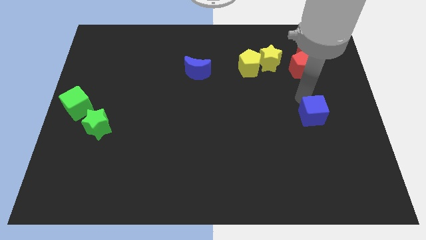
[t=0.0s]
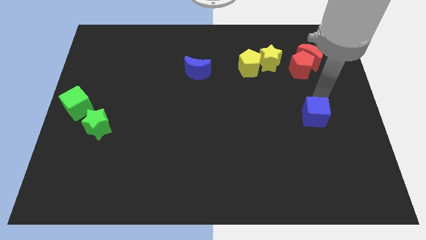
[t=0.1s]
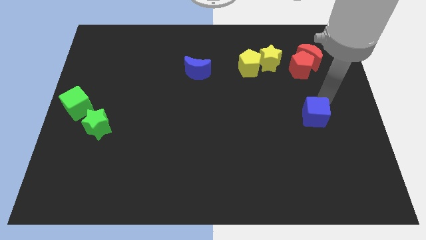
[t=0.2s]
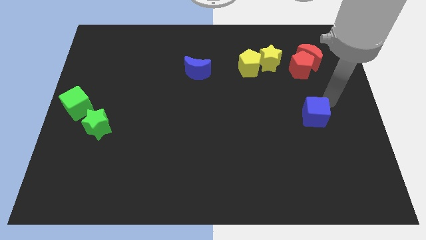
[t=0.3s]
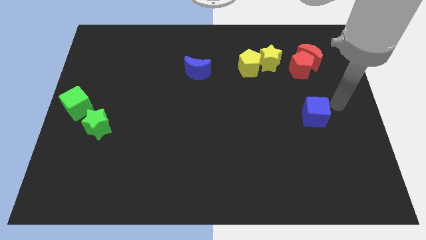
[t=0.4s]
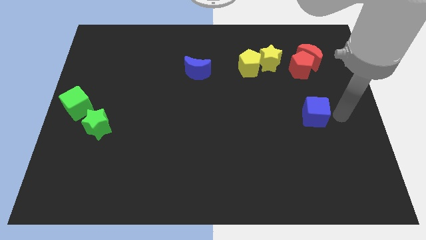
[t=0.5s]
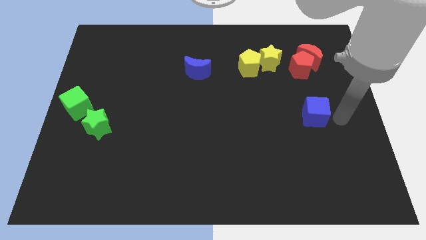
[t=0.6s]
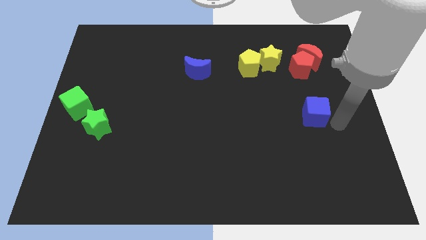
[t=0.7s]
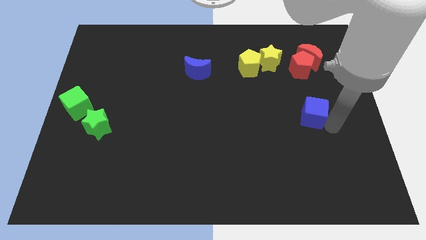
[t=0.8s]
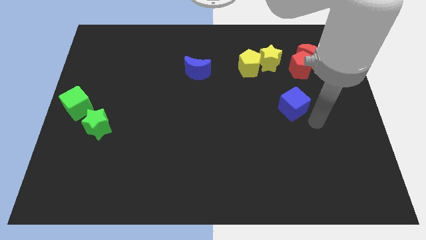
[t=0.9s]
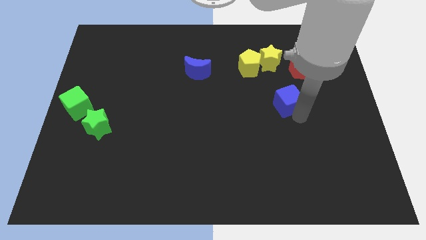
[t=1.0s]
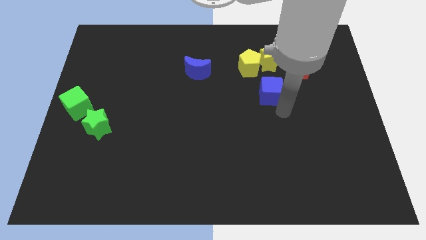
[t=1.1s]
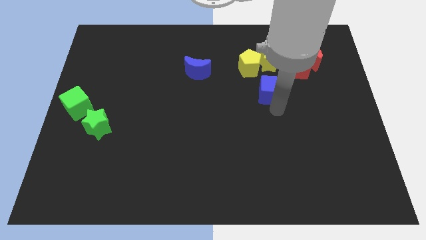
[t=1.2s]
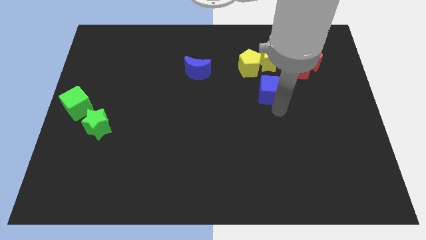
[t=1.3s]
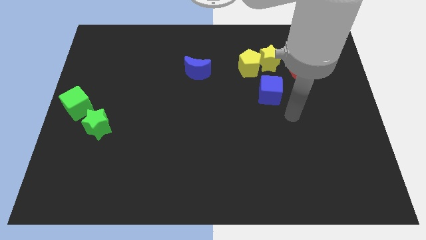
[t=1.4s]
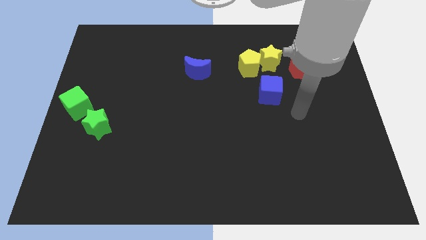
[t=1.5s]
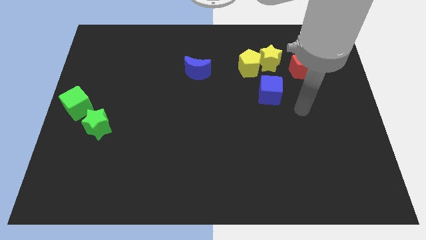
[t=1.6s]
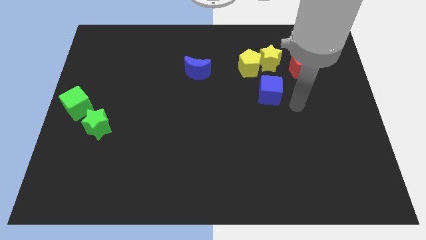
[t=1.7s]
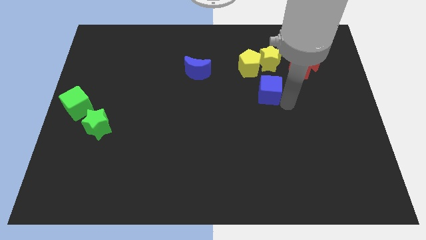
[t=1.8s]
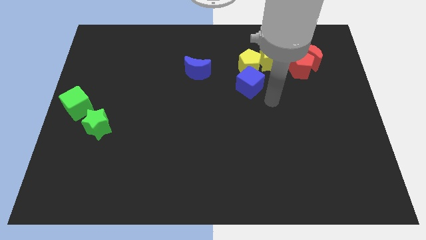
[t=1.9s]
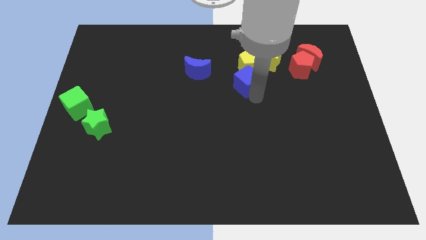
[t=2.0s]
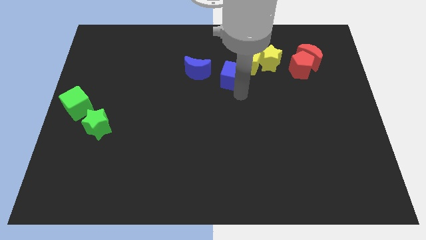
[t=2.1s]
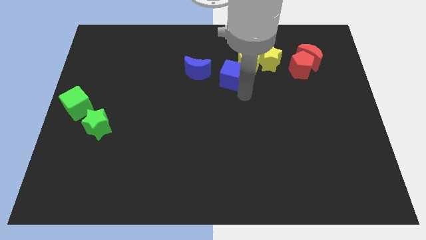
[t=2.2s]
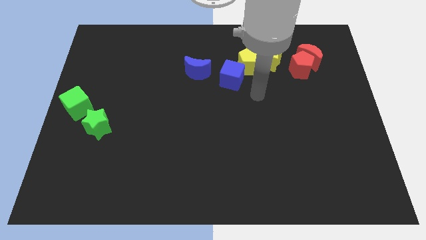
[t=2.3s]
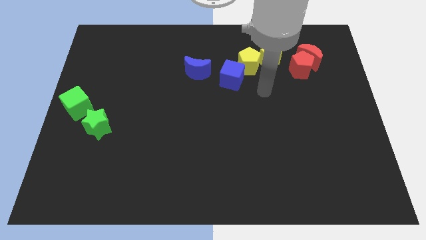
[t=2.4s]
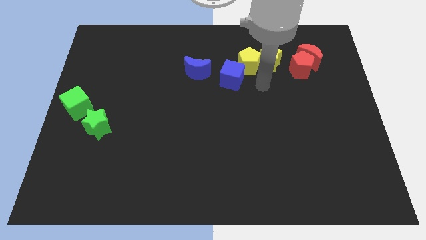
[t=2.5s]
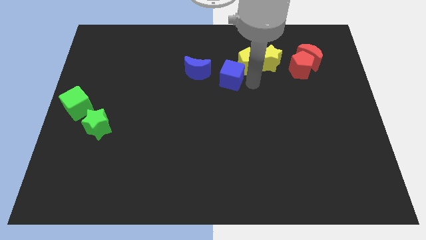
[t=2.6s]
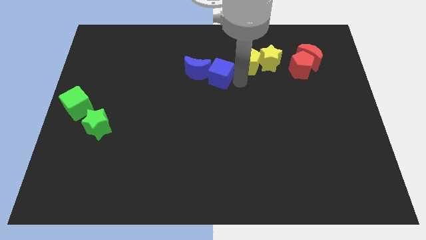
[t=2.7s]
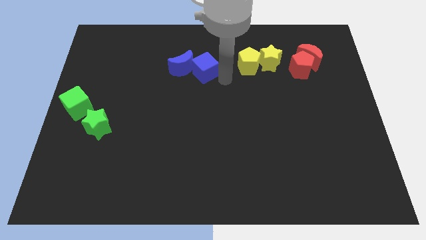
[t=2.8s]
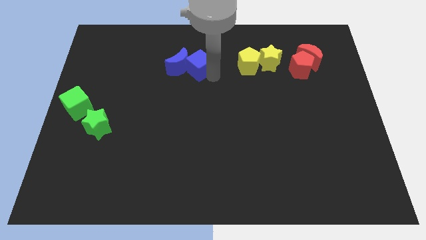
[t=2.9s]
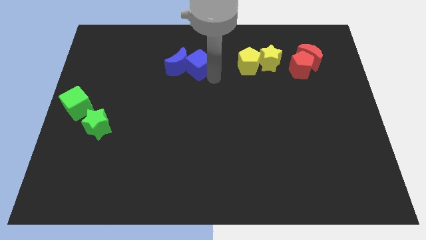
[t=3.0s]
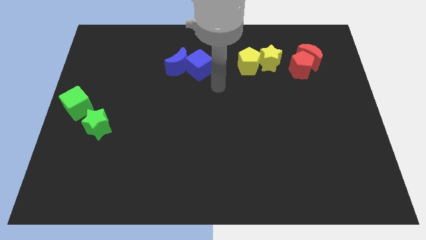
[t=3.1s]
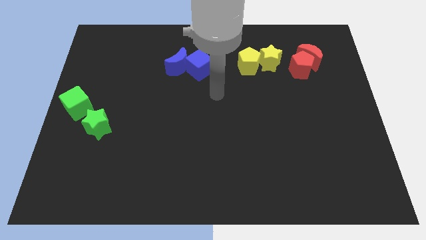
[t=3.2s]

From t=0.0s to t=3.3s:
place blue cube to the right of the blue moon

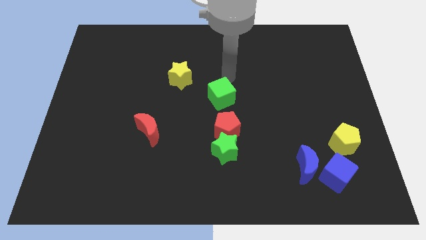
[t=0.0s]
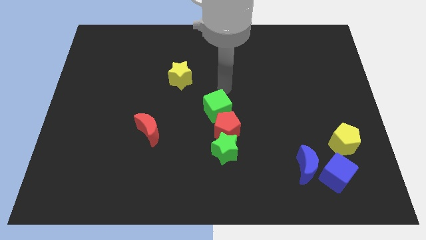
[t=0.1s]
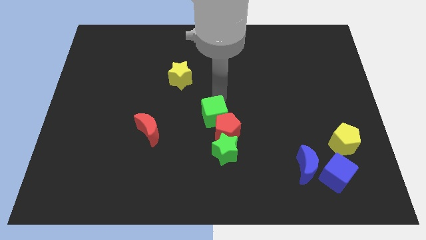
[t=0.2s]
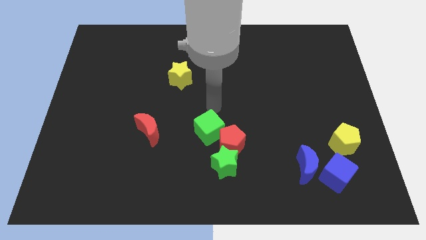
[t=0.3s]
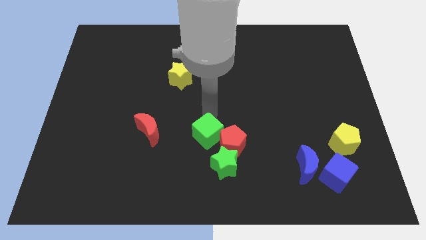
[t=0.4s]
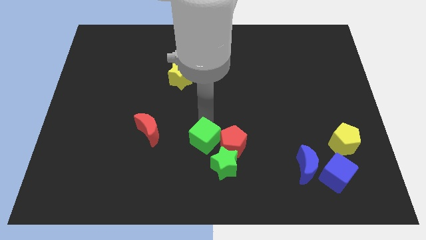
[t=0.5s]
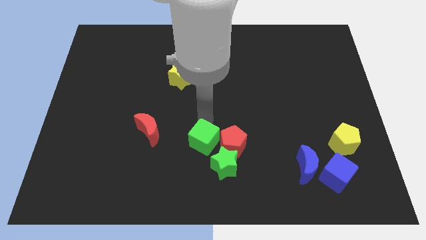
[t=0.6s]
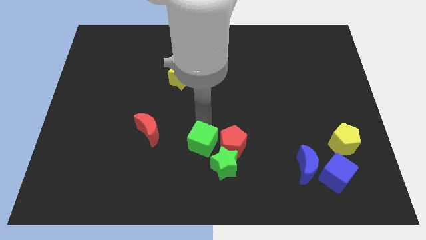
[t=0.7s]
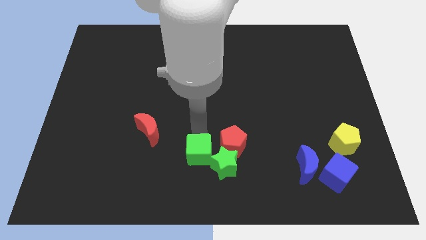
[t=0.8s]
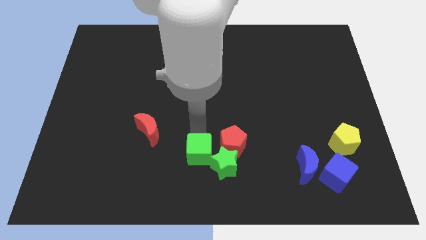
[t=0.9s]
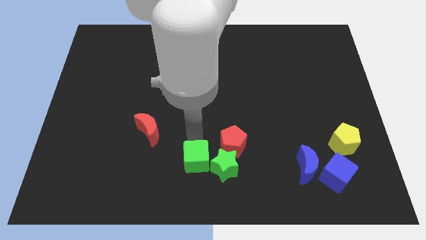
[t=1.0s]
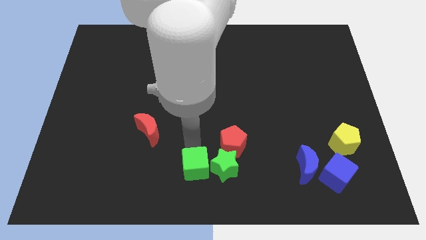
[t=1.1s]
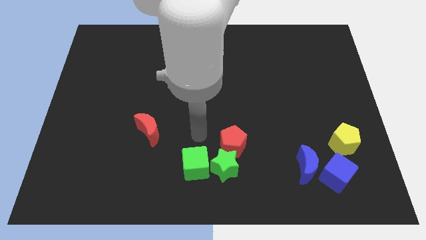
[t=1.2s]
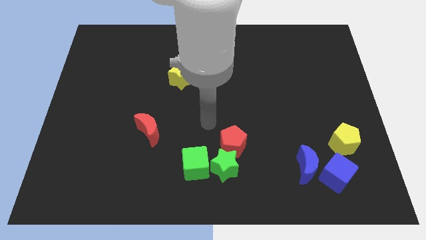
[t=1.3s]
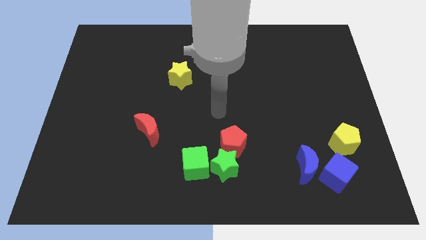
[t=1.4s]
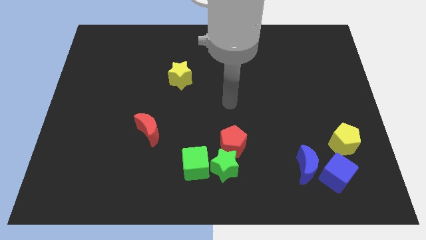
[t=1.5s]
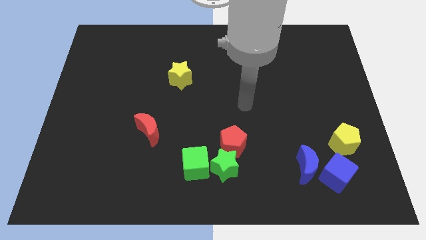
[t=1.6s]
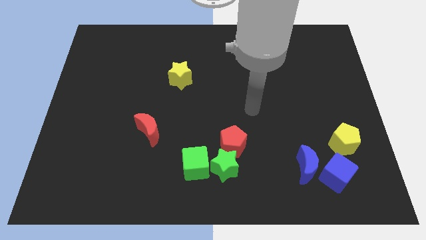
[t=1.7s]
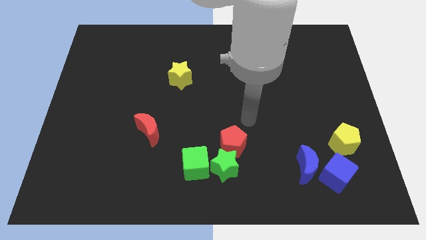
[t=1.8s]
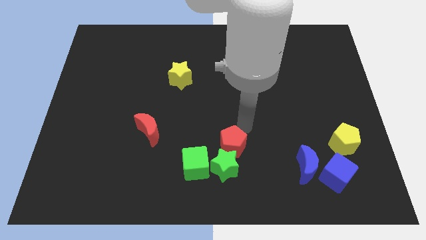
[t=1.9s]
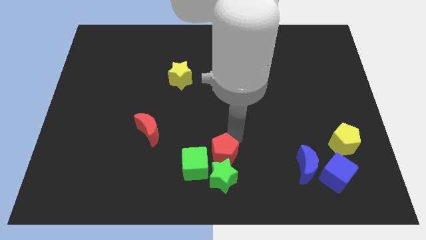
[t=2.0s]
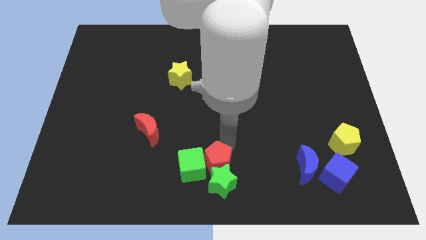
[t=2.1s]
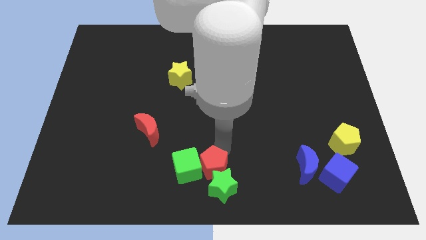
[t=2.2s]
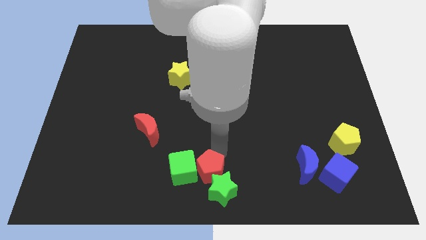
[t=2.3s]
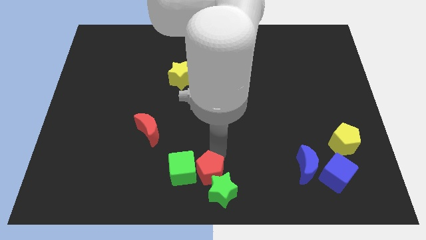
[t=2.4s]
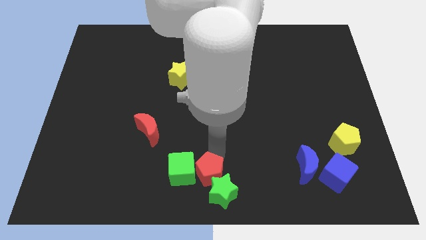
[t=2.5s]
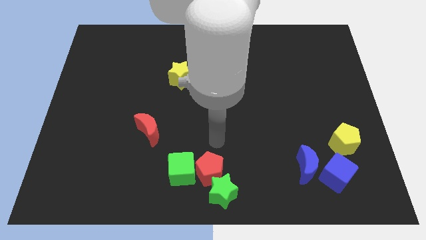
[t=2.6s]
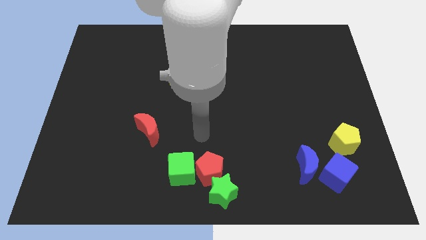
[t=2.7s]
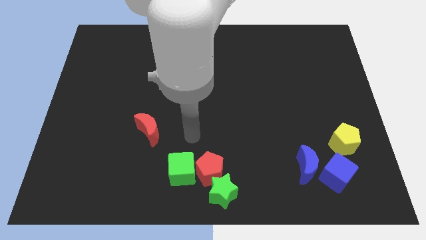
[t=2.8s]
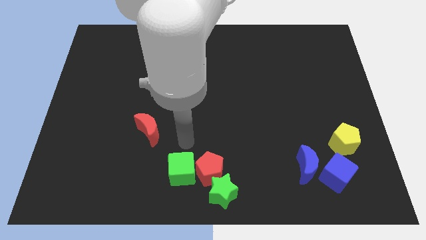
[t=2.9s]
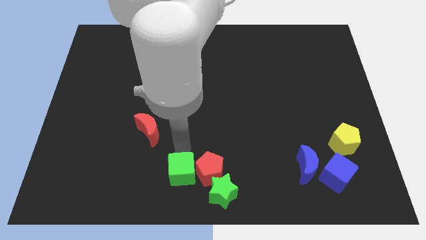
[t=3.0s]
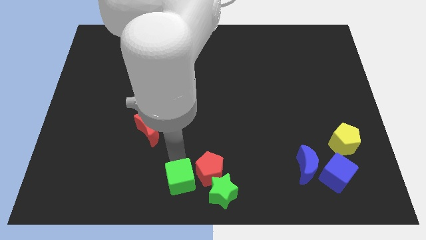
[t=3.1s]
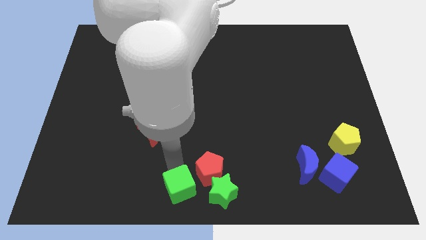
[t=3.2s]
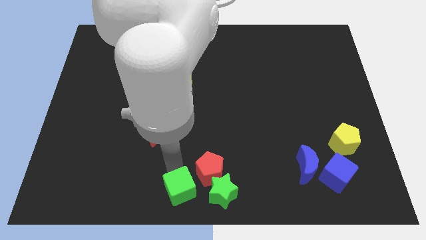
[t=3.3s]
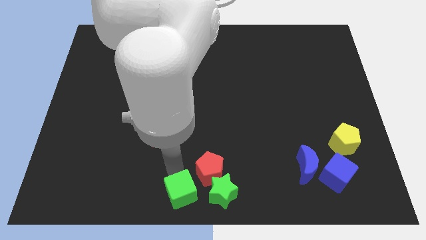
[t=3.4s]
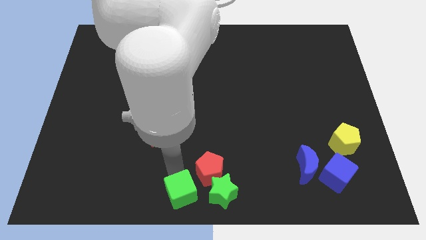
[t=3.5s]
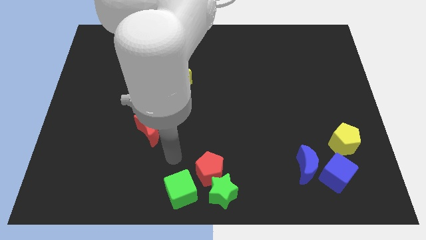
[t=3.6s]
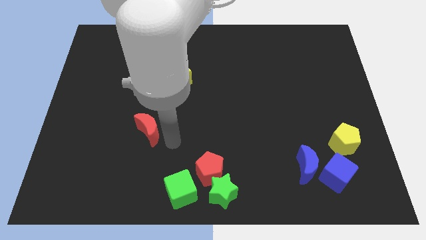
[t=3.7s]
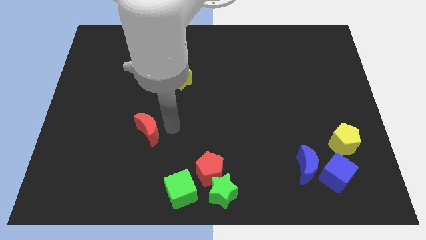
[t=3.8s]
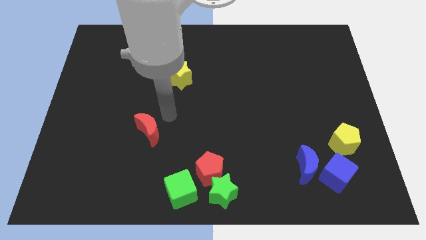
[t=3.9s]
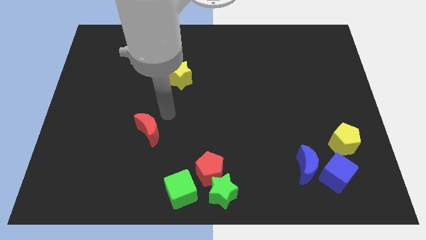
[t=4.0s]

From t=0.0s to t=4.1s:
push the green cube red pentagon and green star to the bottom center of the board

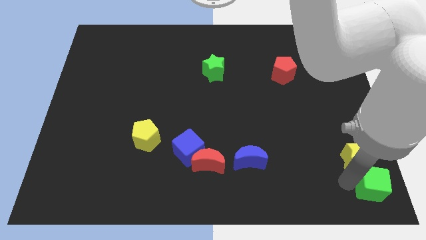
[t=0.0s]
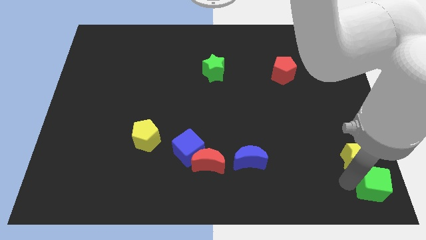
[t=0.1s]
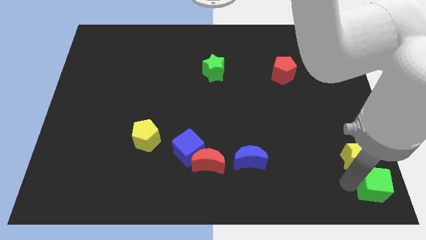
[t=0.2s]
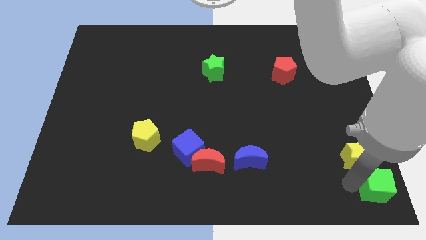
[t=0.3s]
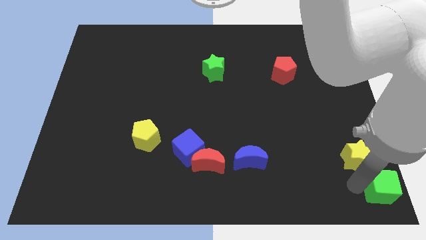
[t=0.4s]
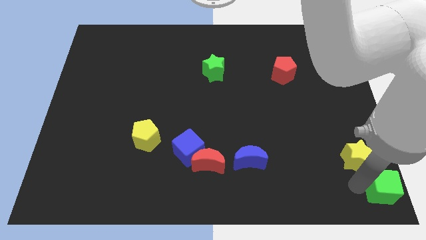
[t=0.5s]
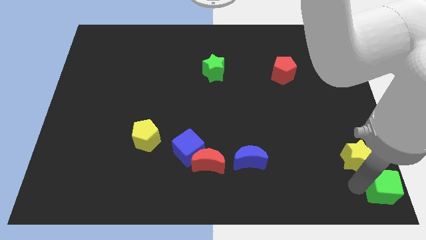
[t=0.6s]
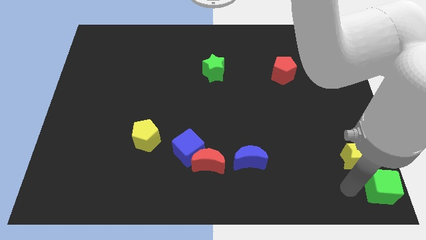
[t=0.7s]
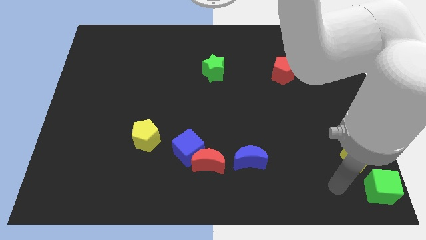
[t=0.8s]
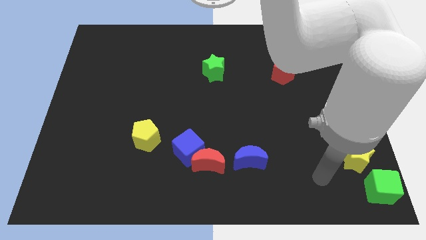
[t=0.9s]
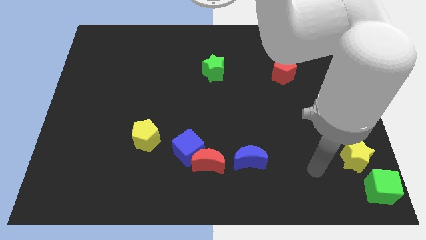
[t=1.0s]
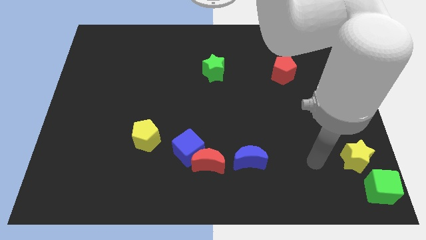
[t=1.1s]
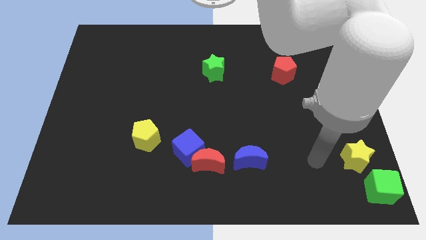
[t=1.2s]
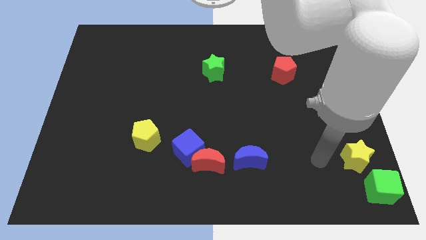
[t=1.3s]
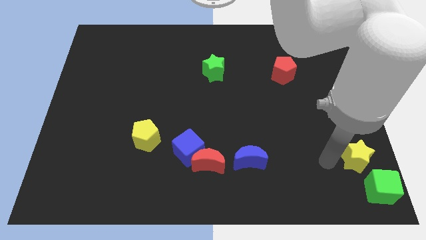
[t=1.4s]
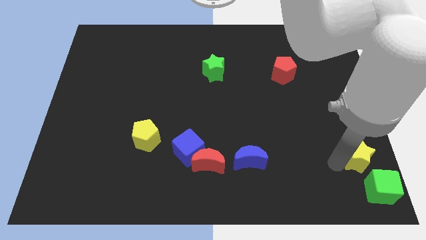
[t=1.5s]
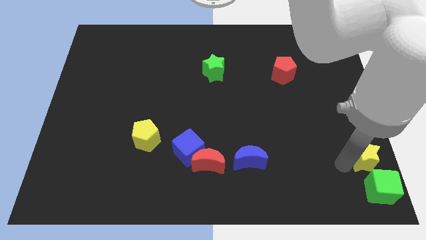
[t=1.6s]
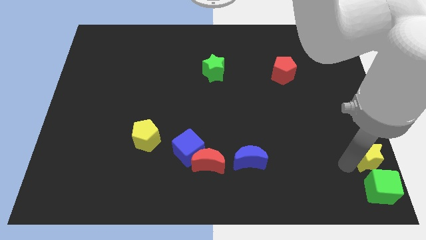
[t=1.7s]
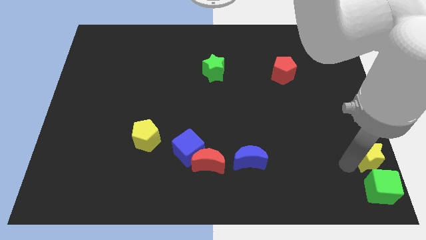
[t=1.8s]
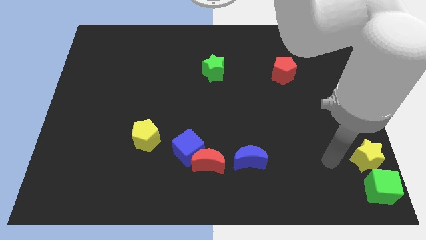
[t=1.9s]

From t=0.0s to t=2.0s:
put the green cube and yellow star to the bottom right corner of the board
